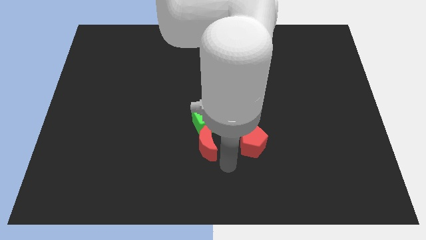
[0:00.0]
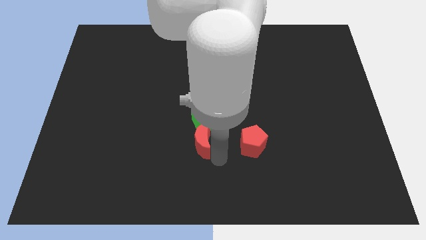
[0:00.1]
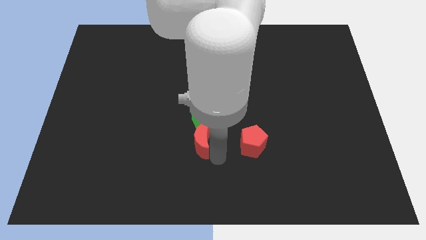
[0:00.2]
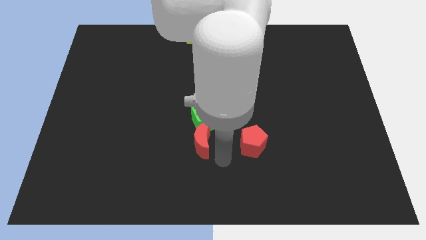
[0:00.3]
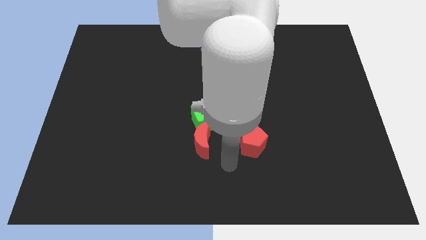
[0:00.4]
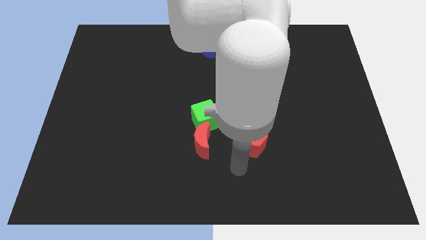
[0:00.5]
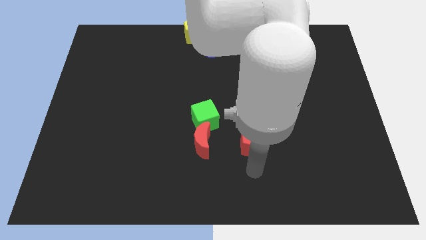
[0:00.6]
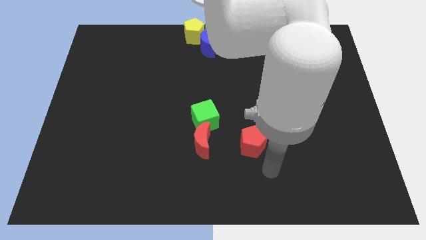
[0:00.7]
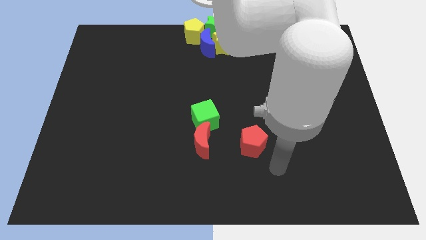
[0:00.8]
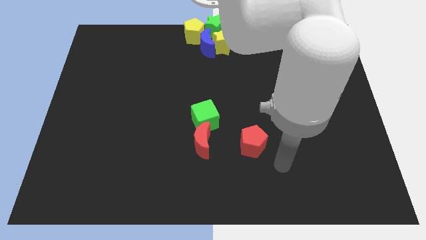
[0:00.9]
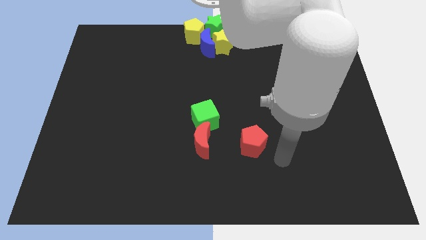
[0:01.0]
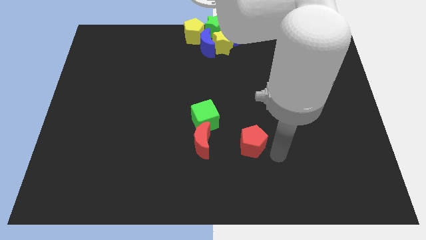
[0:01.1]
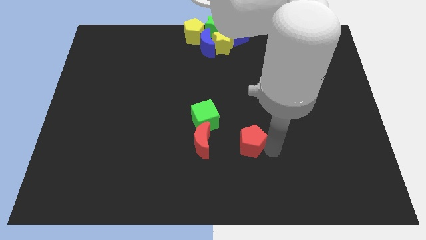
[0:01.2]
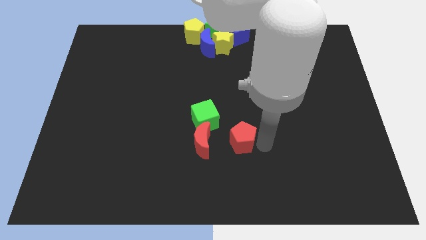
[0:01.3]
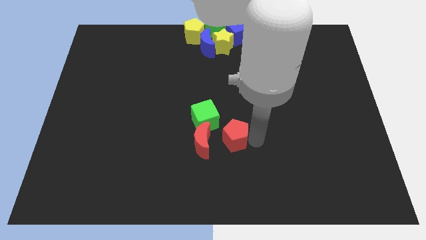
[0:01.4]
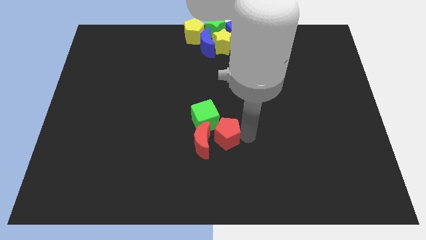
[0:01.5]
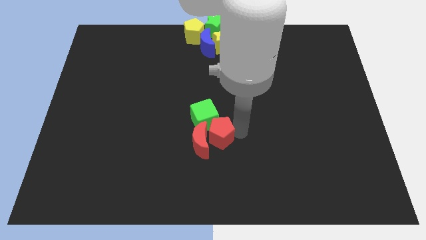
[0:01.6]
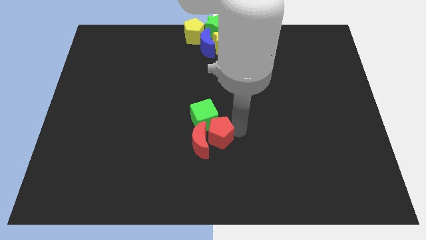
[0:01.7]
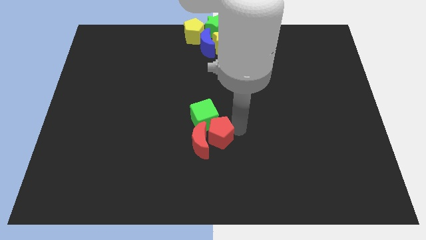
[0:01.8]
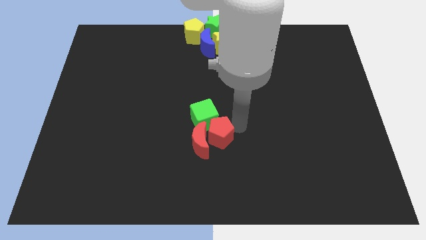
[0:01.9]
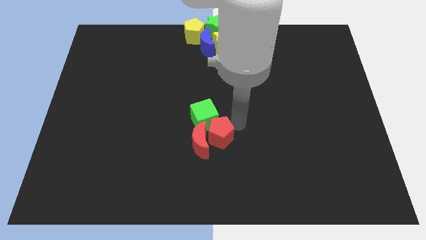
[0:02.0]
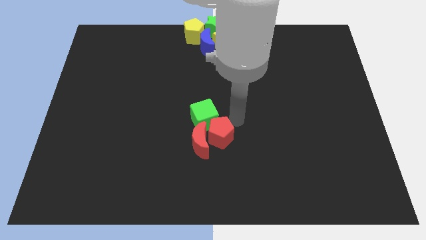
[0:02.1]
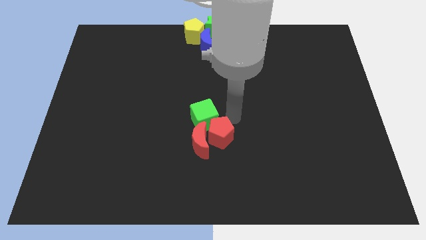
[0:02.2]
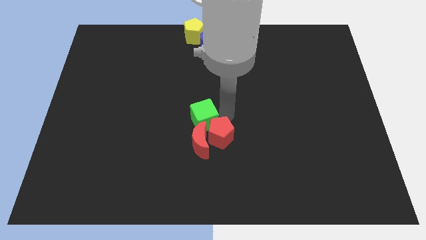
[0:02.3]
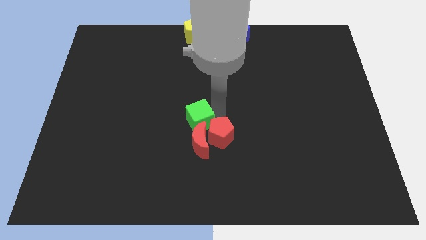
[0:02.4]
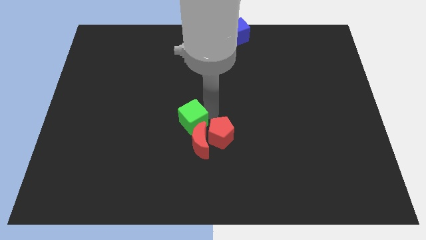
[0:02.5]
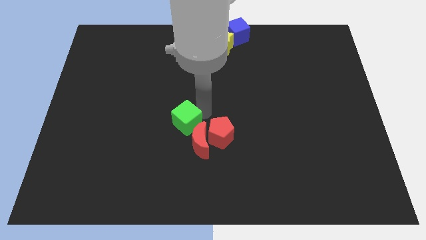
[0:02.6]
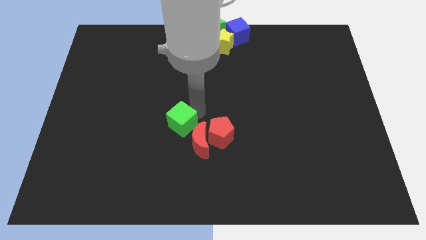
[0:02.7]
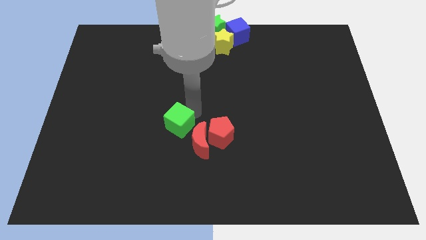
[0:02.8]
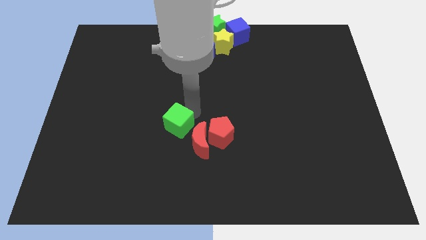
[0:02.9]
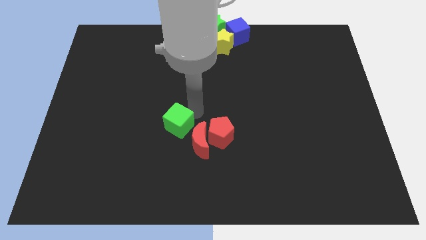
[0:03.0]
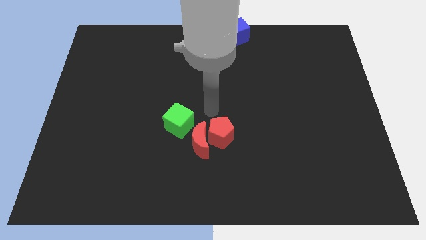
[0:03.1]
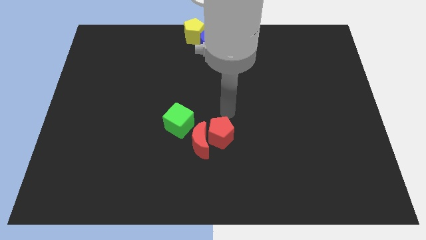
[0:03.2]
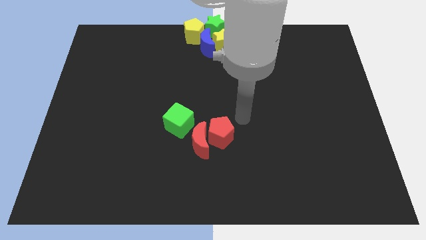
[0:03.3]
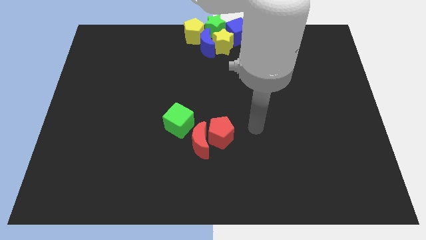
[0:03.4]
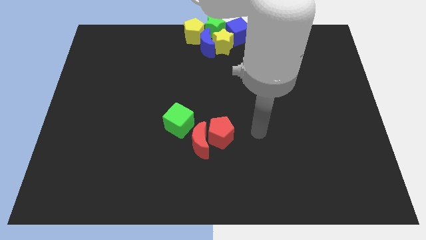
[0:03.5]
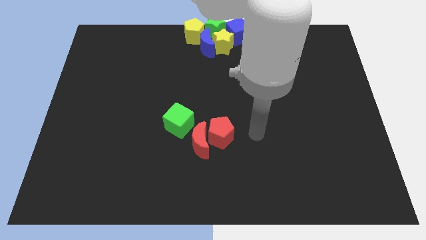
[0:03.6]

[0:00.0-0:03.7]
move the red pentagon into the red crescent

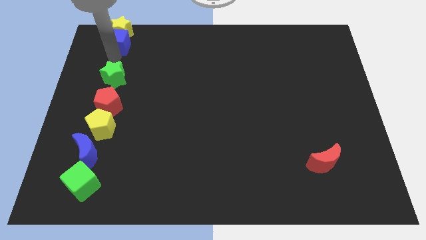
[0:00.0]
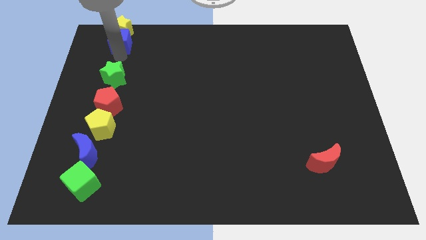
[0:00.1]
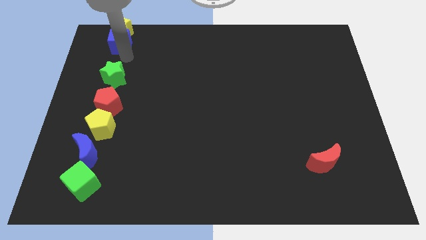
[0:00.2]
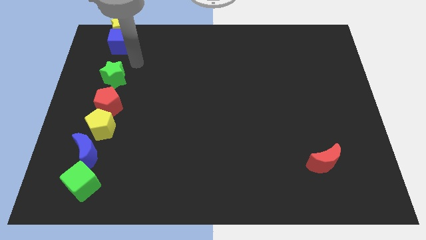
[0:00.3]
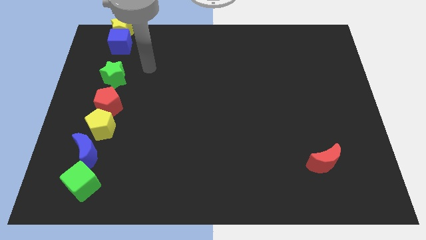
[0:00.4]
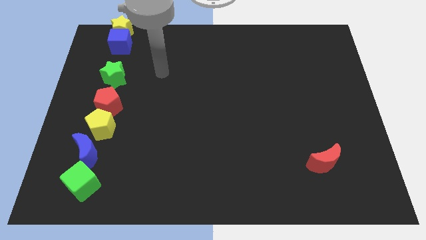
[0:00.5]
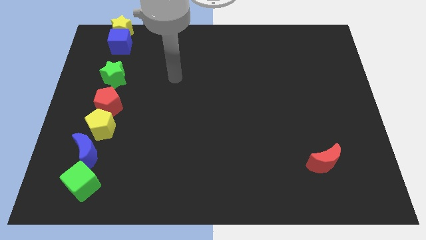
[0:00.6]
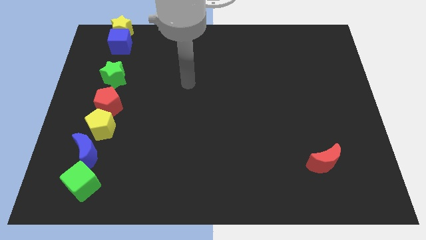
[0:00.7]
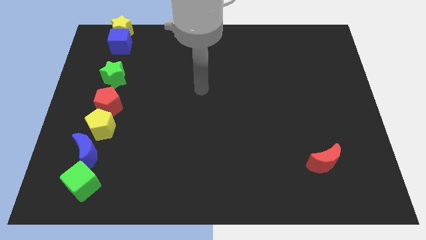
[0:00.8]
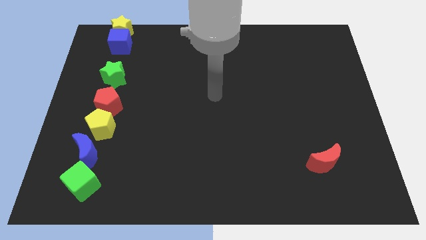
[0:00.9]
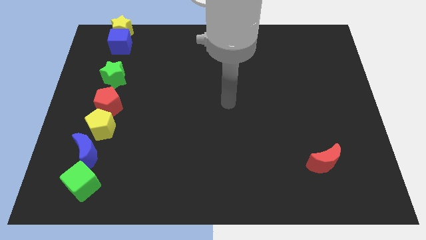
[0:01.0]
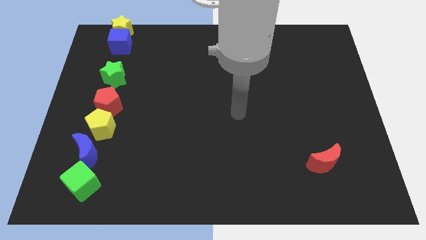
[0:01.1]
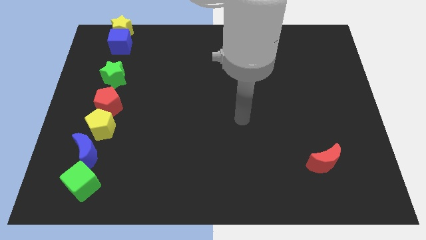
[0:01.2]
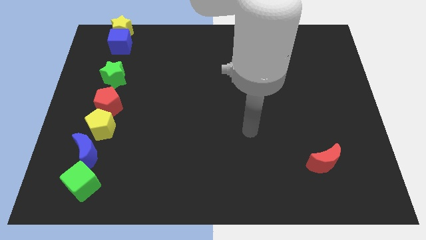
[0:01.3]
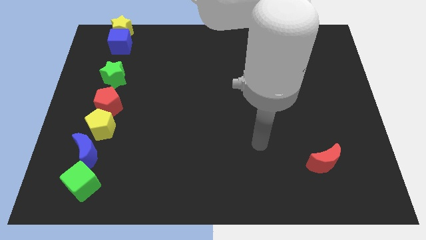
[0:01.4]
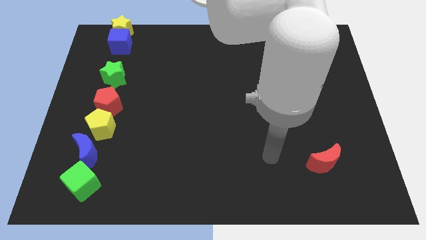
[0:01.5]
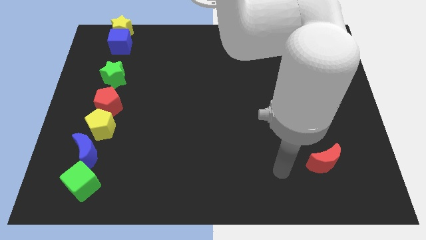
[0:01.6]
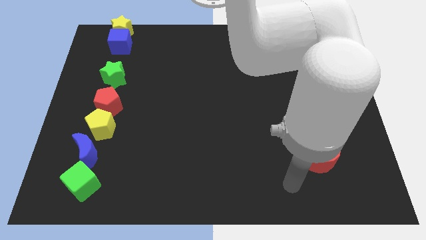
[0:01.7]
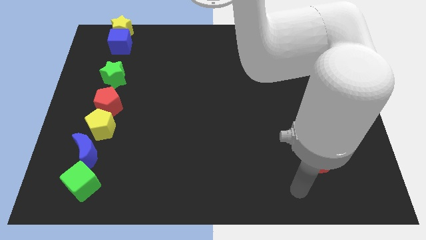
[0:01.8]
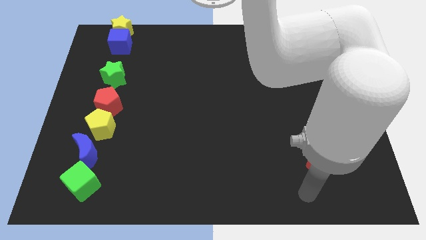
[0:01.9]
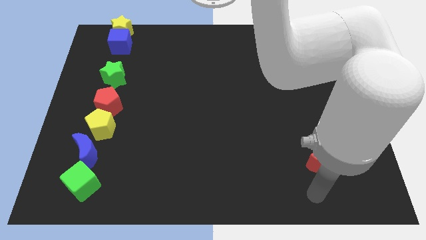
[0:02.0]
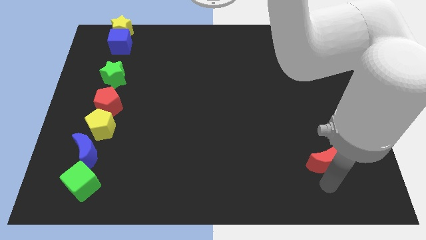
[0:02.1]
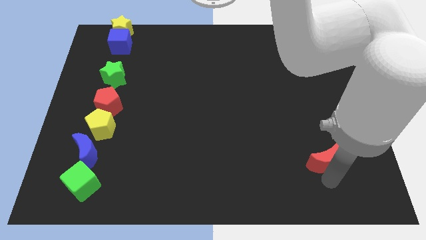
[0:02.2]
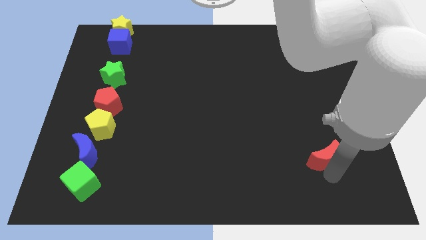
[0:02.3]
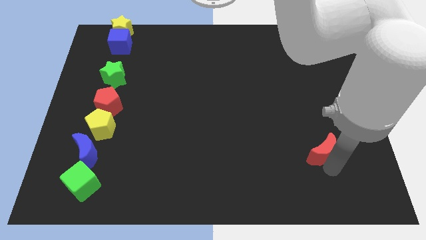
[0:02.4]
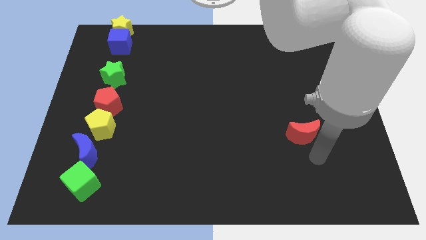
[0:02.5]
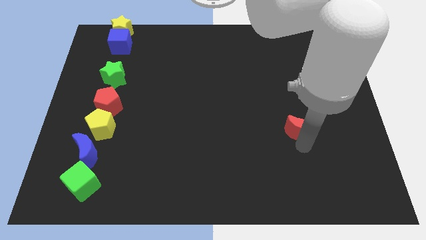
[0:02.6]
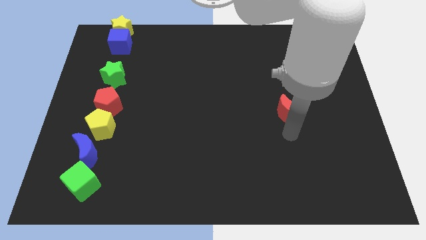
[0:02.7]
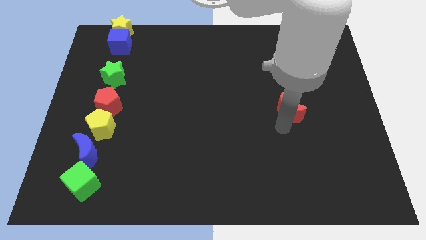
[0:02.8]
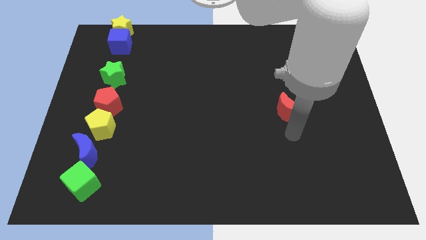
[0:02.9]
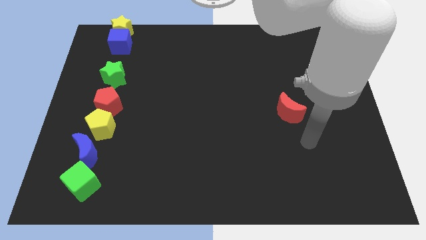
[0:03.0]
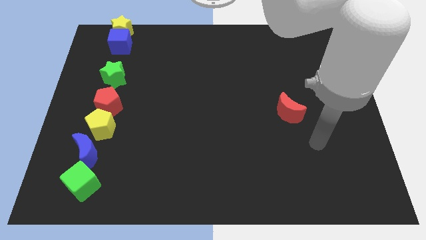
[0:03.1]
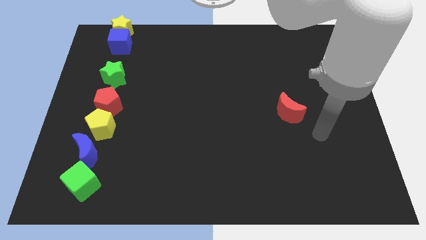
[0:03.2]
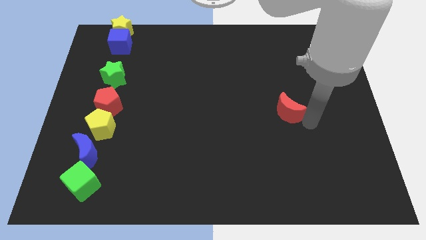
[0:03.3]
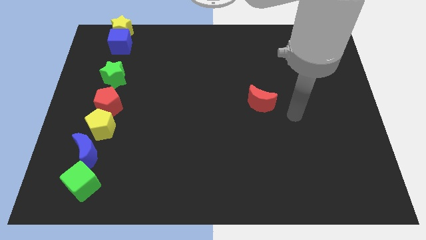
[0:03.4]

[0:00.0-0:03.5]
place the red moon to the center

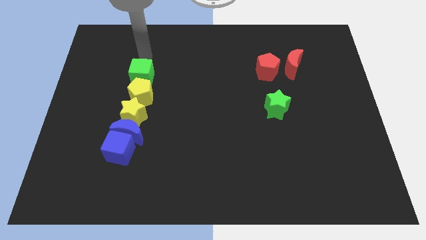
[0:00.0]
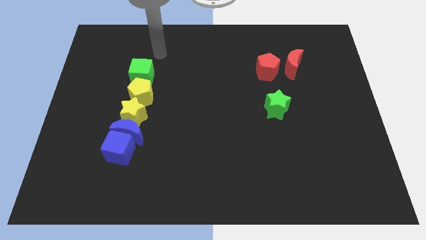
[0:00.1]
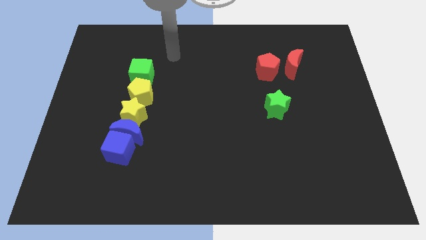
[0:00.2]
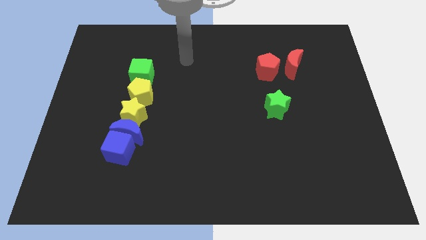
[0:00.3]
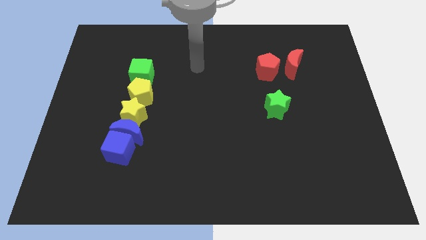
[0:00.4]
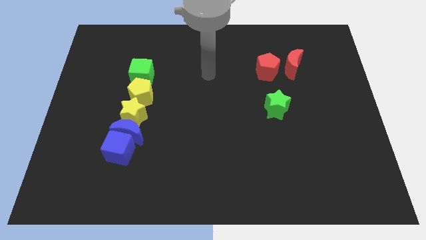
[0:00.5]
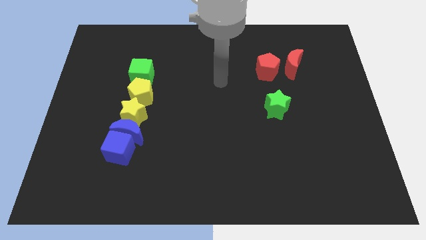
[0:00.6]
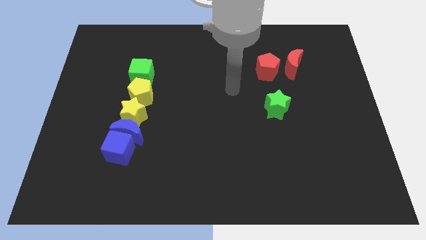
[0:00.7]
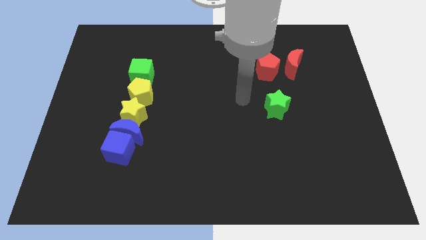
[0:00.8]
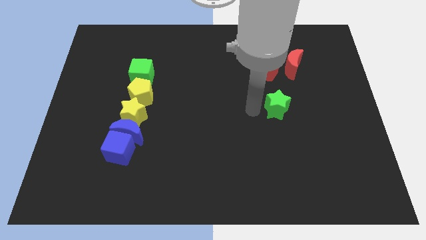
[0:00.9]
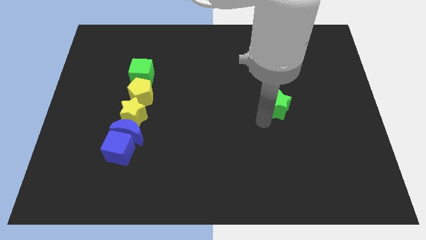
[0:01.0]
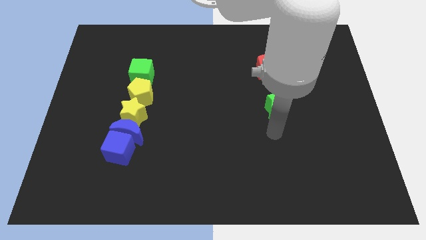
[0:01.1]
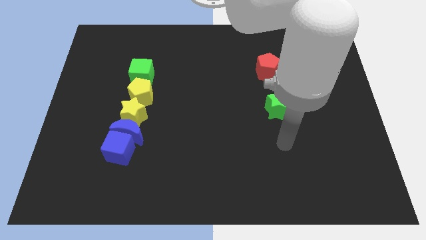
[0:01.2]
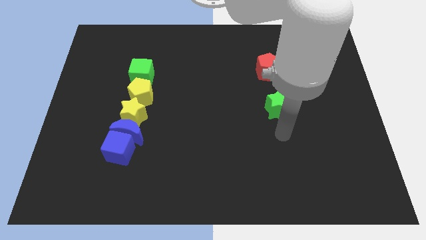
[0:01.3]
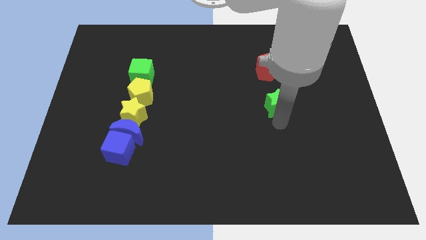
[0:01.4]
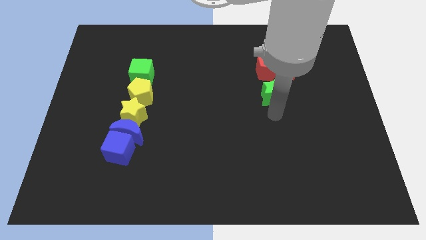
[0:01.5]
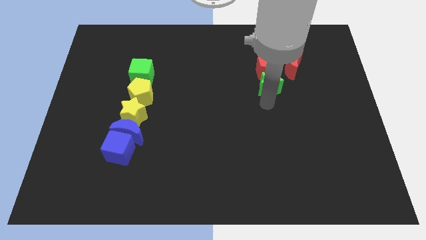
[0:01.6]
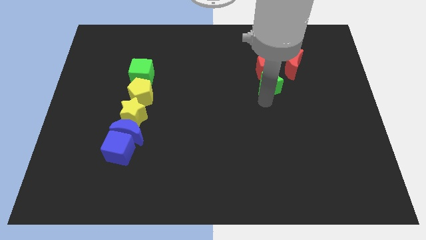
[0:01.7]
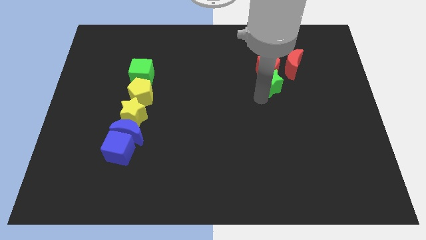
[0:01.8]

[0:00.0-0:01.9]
move the green star close to the red pentagon
